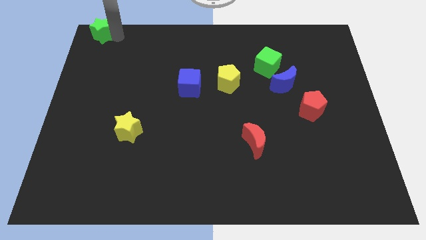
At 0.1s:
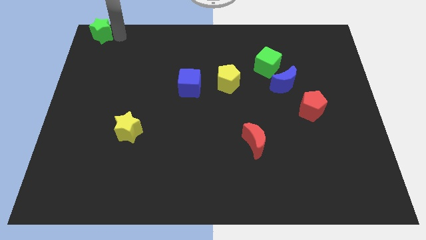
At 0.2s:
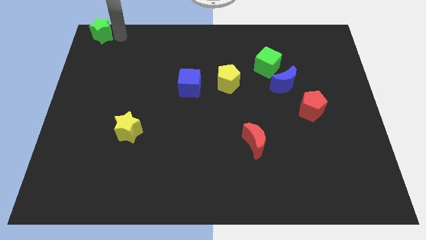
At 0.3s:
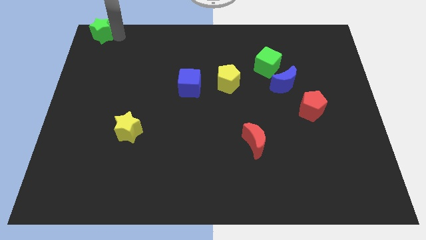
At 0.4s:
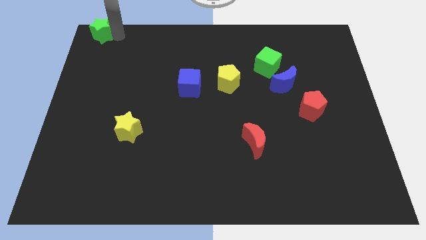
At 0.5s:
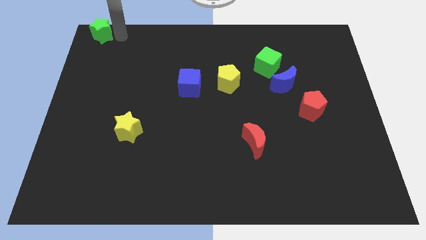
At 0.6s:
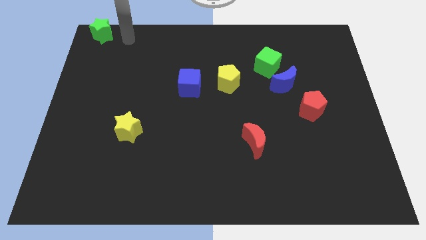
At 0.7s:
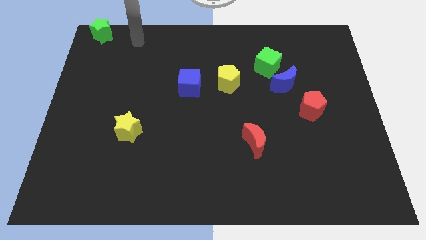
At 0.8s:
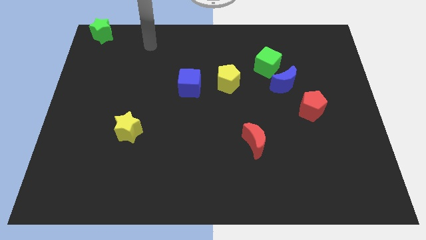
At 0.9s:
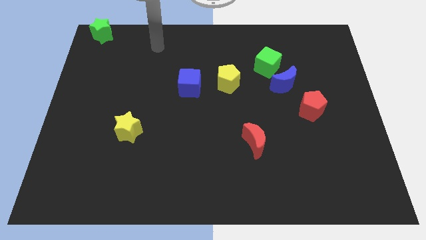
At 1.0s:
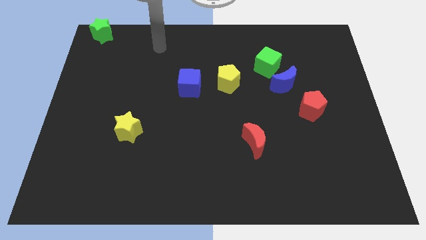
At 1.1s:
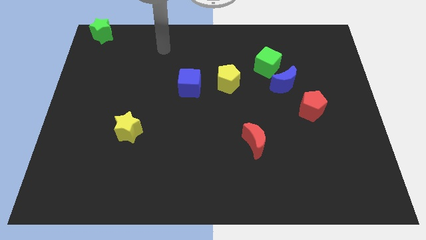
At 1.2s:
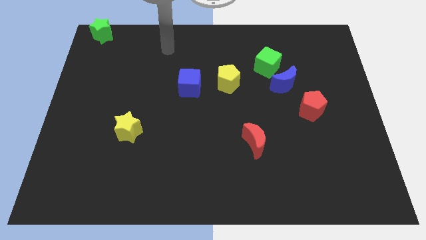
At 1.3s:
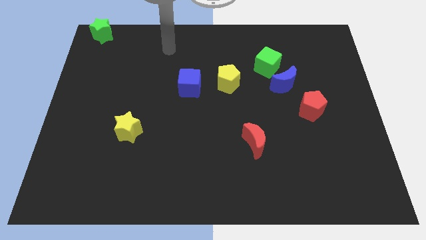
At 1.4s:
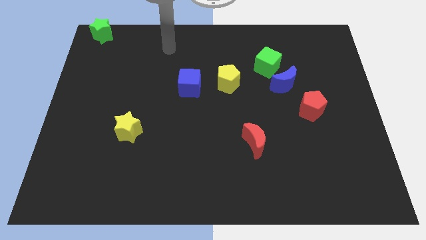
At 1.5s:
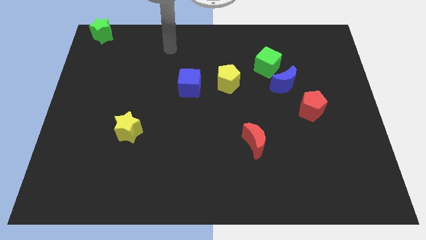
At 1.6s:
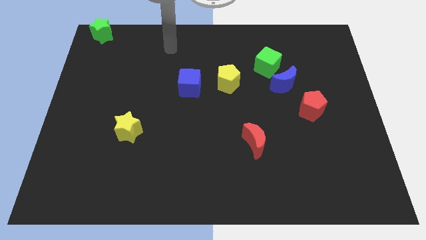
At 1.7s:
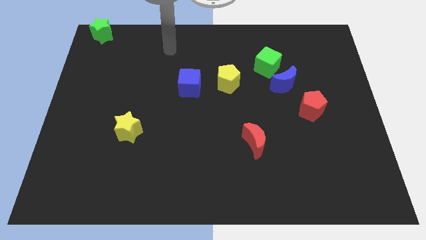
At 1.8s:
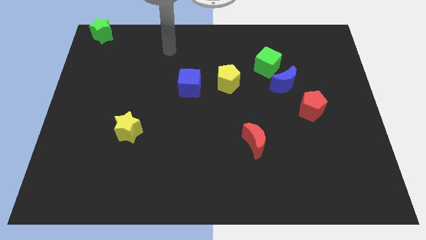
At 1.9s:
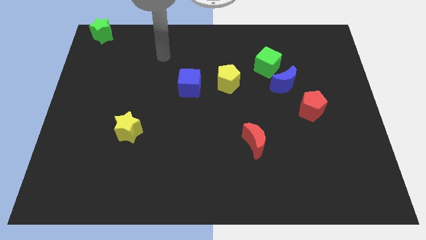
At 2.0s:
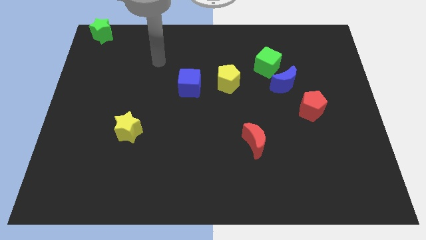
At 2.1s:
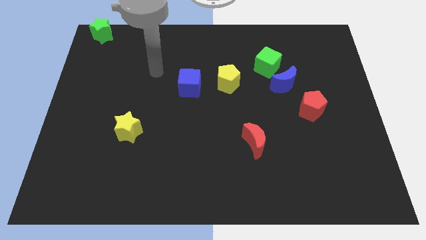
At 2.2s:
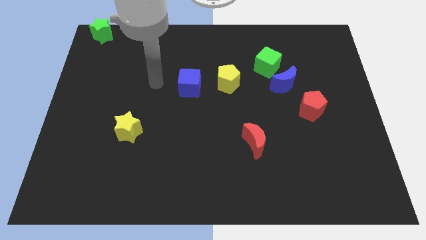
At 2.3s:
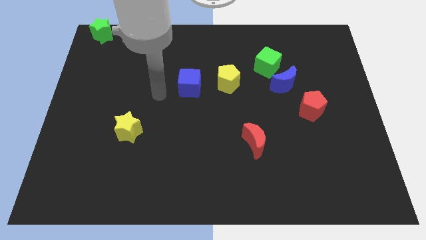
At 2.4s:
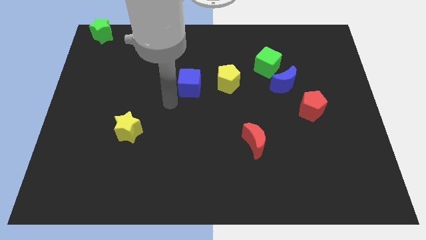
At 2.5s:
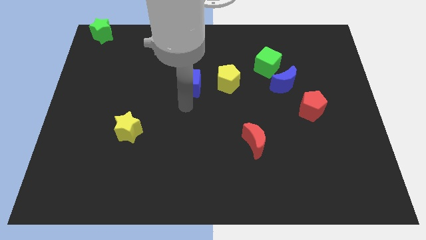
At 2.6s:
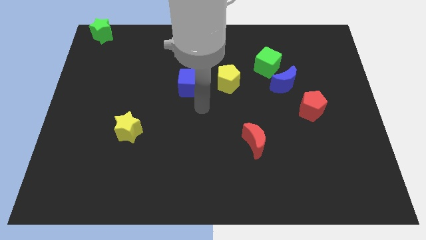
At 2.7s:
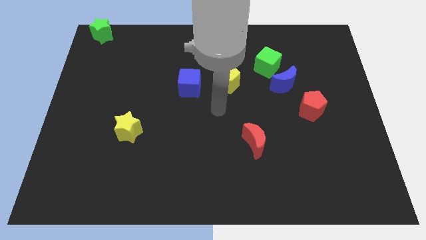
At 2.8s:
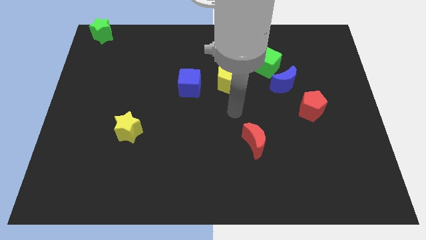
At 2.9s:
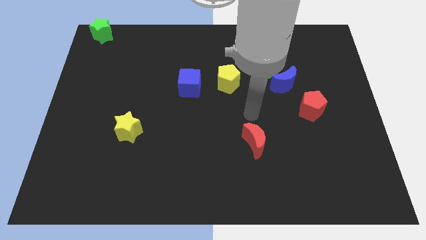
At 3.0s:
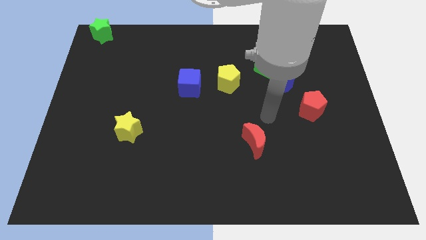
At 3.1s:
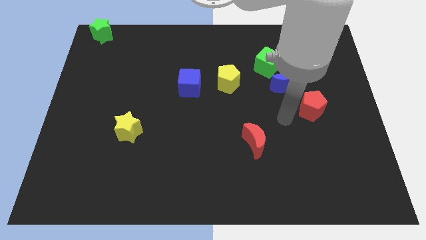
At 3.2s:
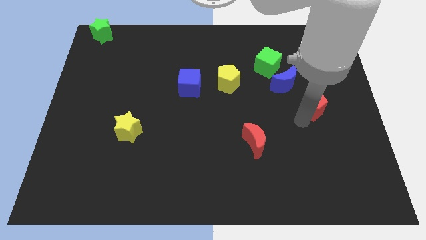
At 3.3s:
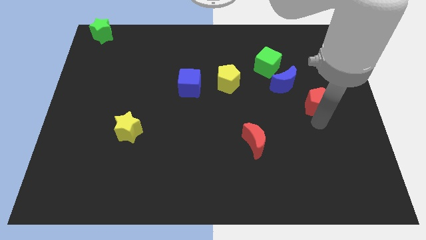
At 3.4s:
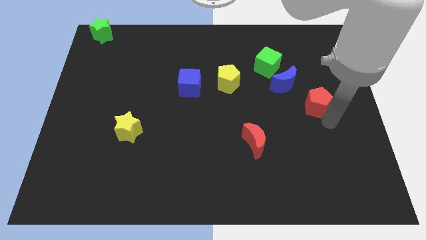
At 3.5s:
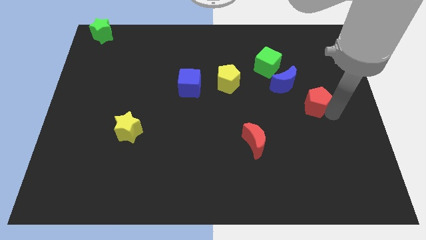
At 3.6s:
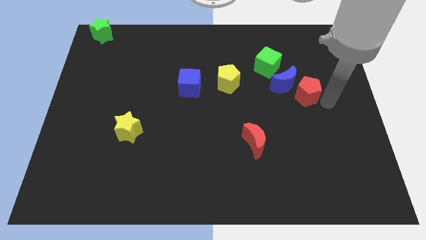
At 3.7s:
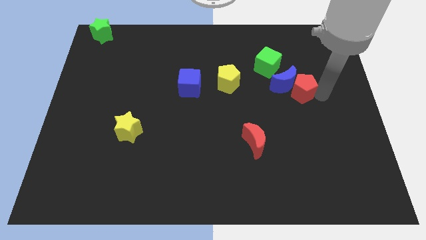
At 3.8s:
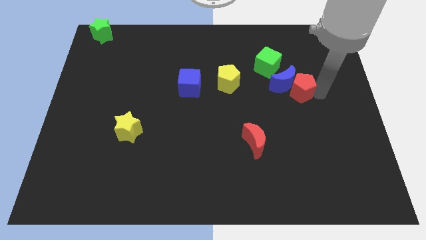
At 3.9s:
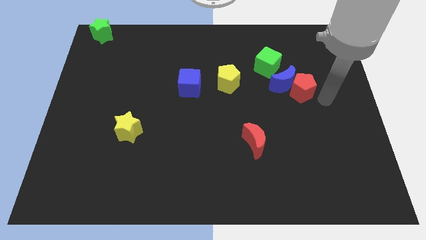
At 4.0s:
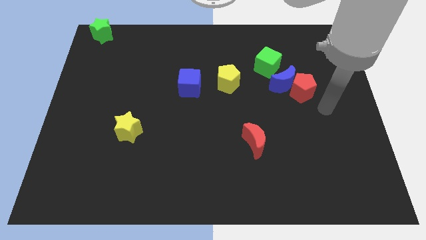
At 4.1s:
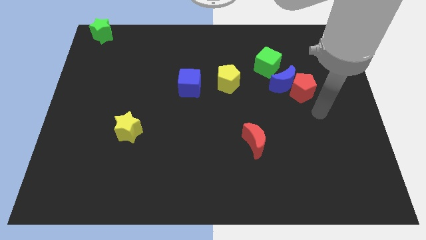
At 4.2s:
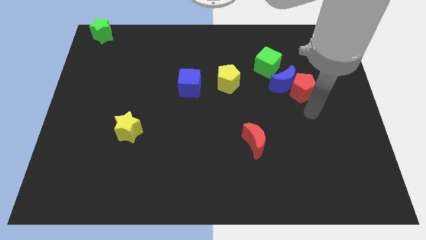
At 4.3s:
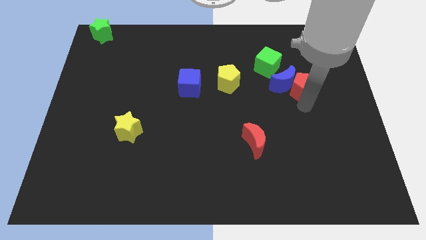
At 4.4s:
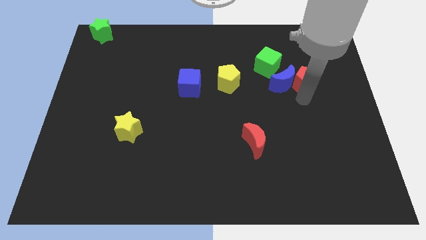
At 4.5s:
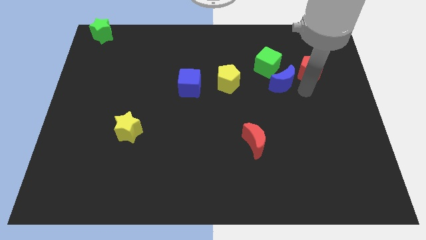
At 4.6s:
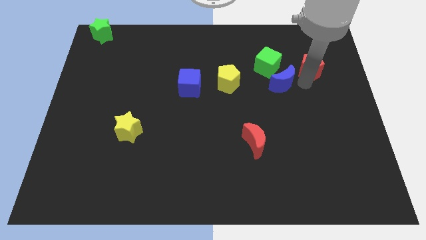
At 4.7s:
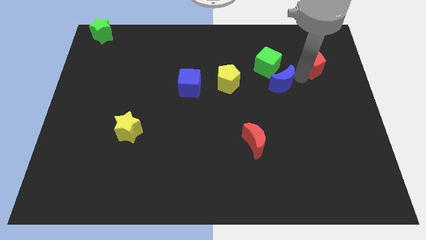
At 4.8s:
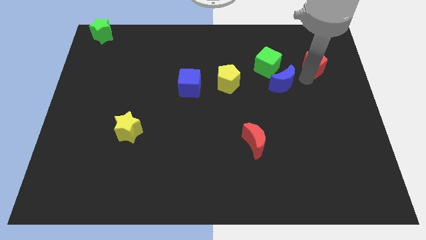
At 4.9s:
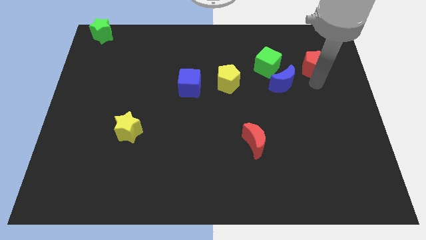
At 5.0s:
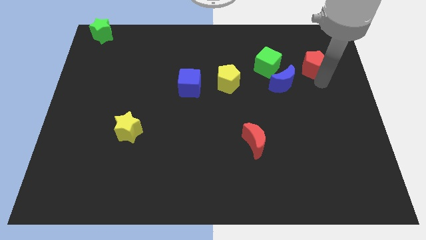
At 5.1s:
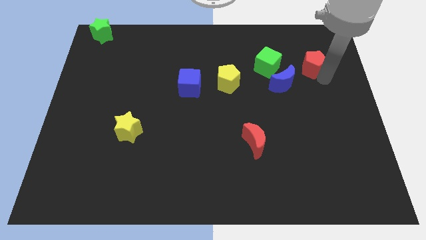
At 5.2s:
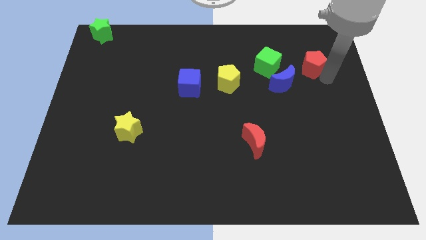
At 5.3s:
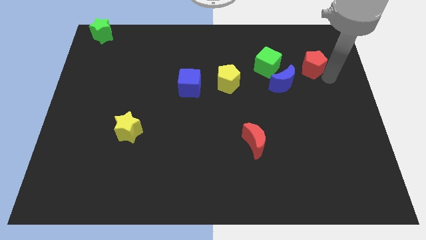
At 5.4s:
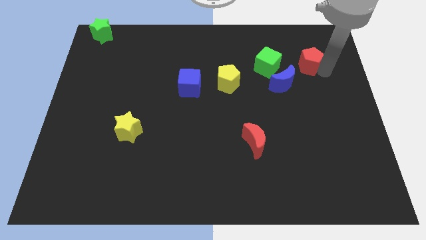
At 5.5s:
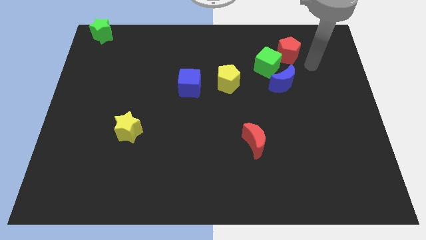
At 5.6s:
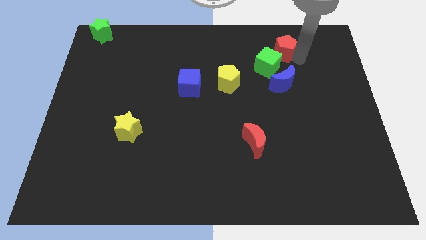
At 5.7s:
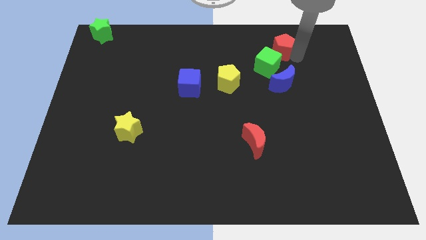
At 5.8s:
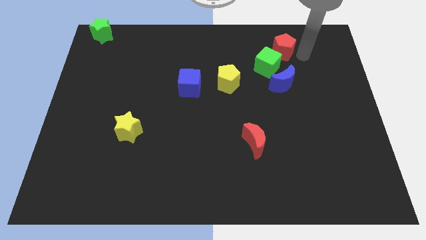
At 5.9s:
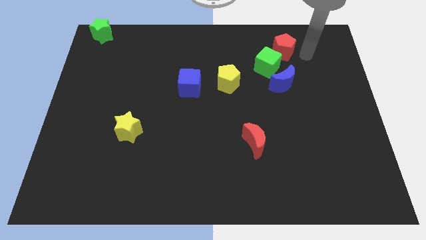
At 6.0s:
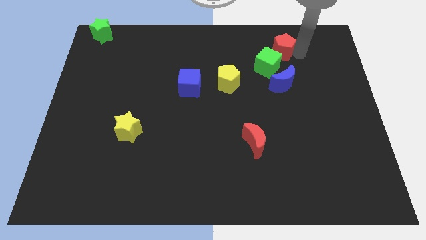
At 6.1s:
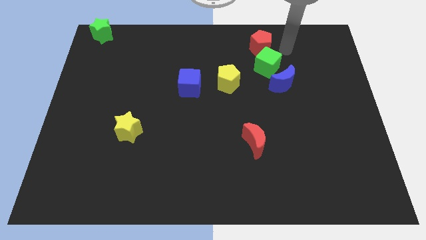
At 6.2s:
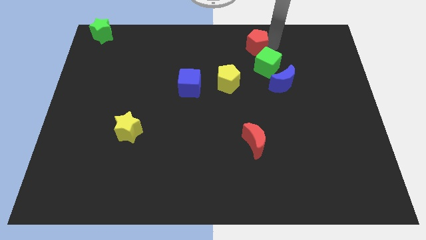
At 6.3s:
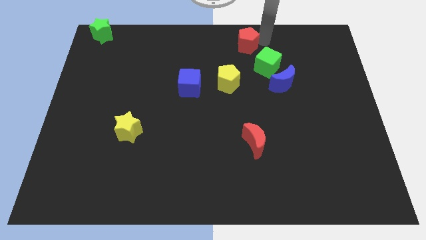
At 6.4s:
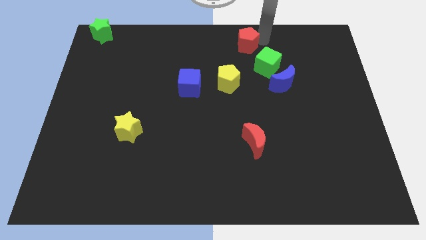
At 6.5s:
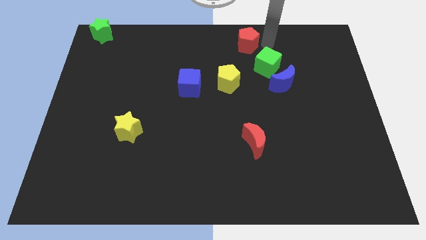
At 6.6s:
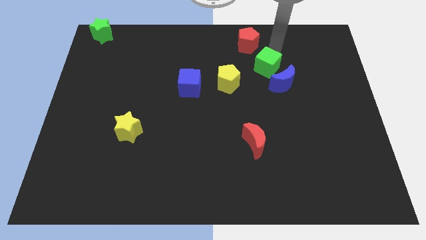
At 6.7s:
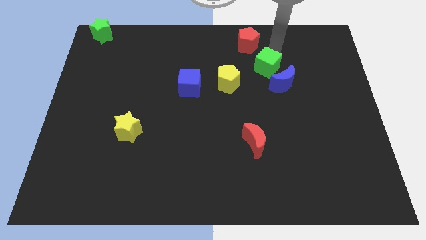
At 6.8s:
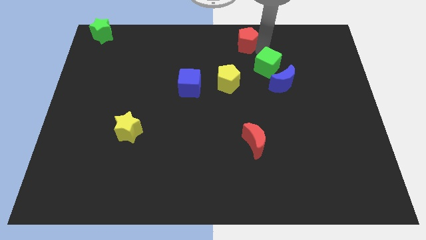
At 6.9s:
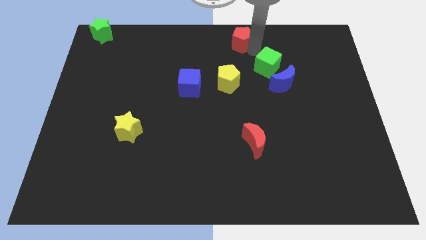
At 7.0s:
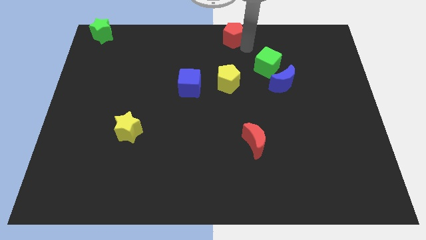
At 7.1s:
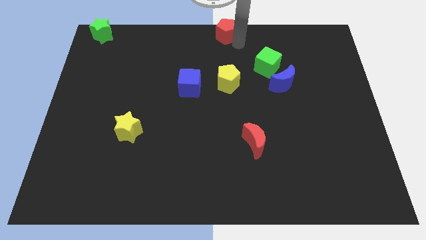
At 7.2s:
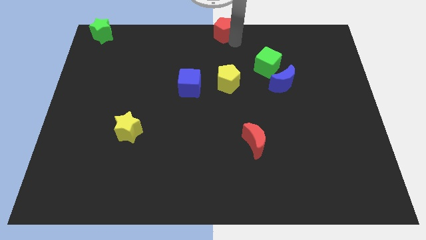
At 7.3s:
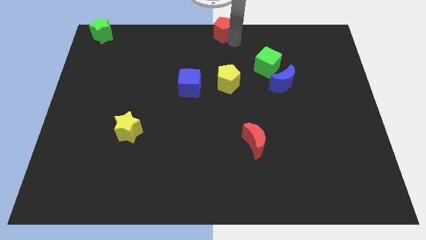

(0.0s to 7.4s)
push the red pentagon to the top center of the board

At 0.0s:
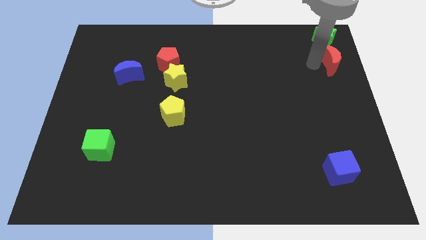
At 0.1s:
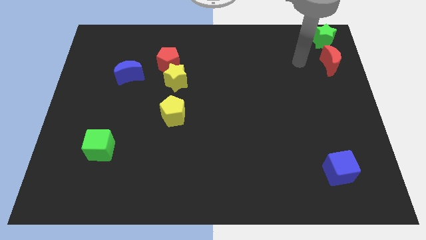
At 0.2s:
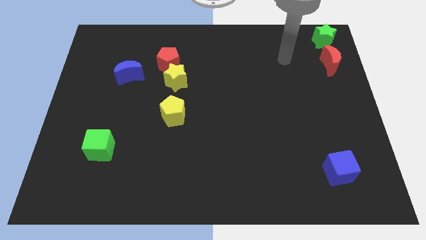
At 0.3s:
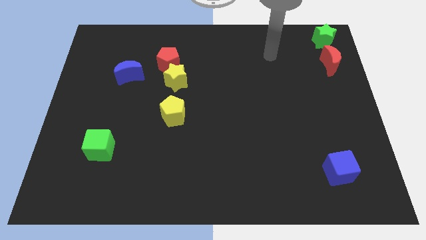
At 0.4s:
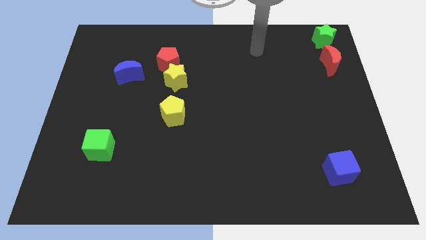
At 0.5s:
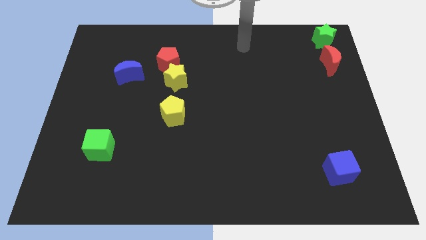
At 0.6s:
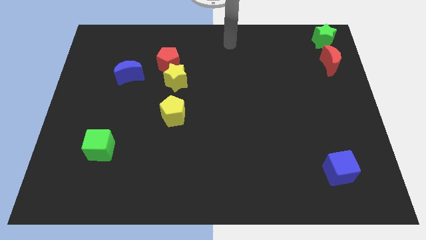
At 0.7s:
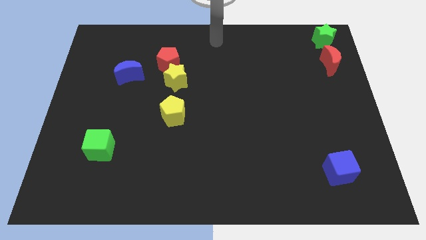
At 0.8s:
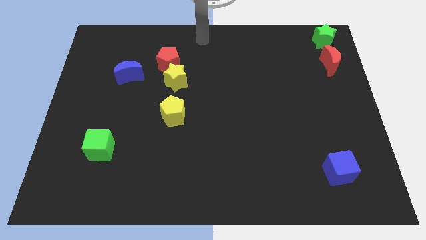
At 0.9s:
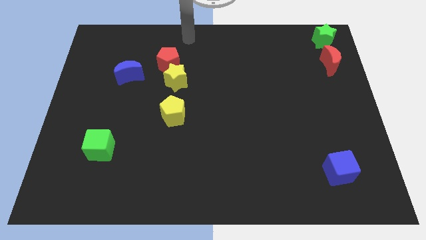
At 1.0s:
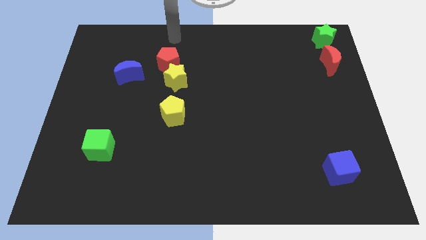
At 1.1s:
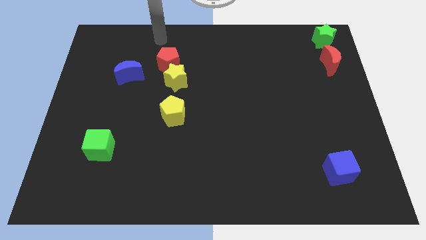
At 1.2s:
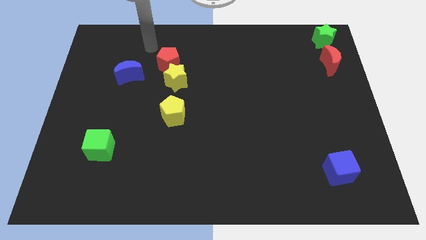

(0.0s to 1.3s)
place the hand above red pentagon

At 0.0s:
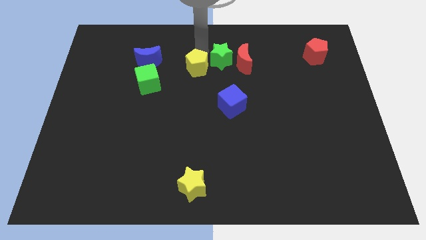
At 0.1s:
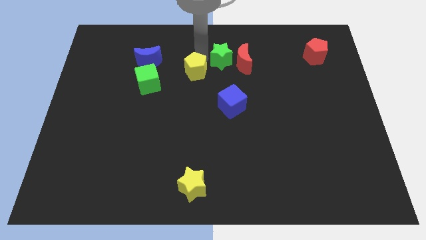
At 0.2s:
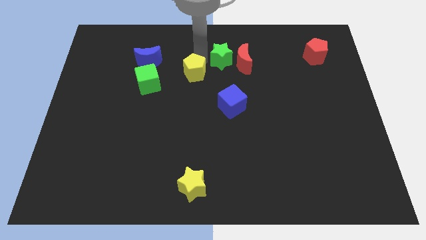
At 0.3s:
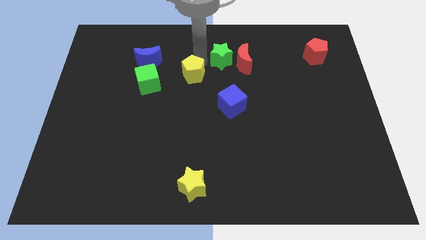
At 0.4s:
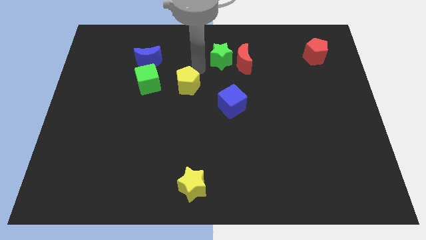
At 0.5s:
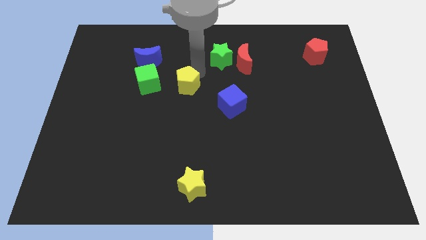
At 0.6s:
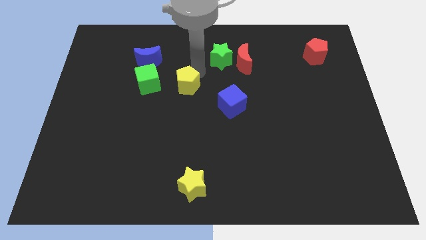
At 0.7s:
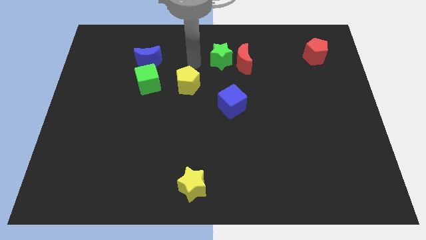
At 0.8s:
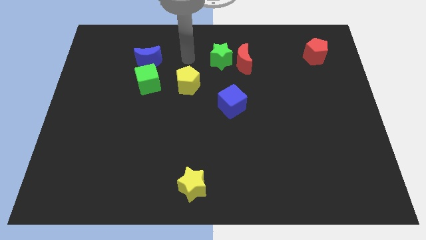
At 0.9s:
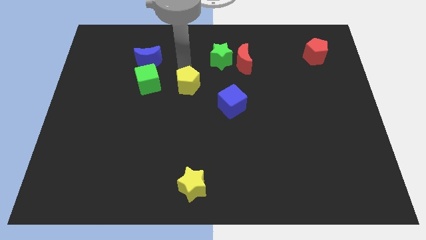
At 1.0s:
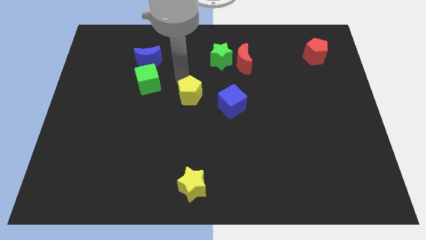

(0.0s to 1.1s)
put yellow pentagon vertically above yellow star
